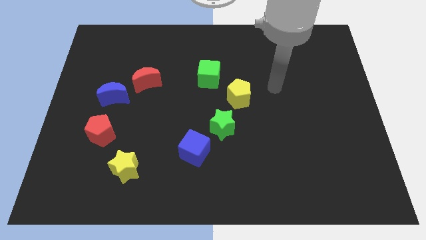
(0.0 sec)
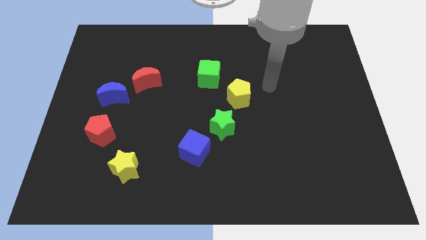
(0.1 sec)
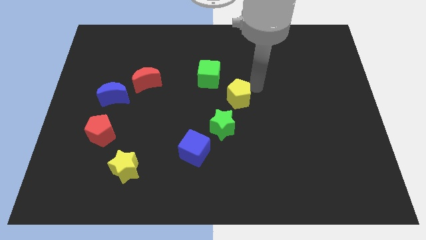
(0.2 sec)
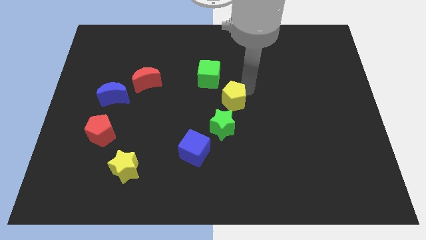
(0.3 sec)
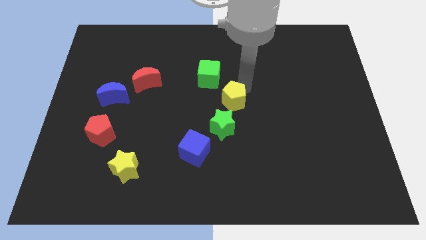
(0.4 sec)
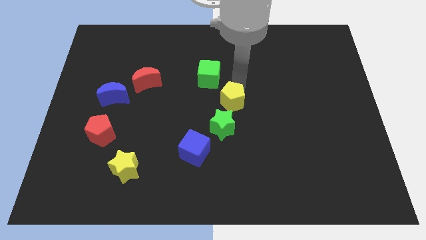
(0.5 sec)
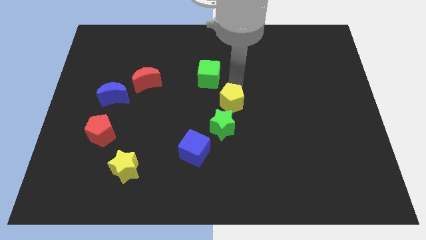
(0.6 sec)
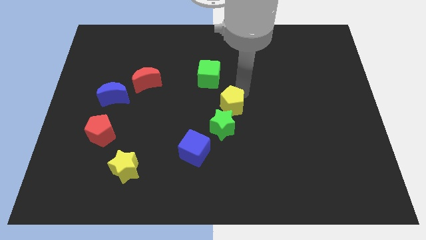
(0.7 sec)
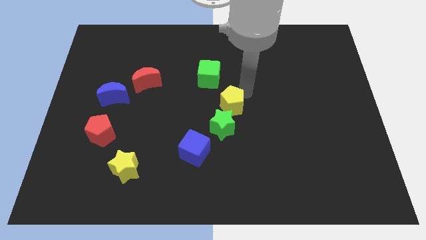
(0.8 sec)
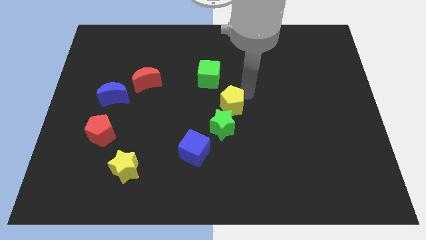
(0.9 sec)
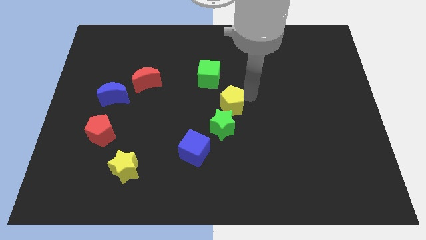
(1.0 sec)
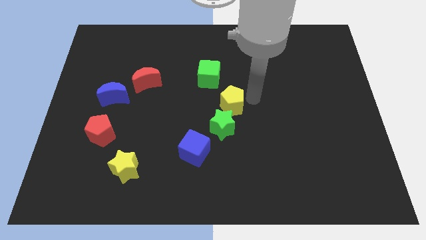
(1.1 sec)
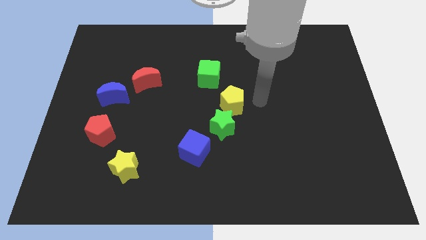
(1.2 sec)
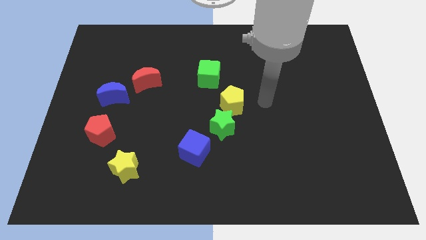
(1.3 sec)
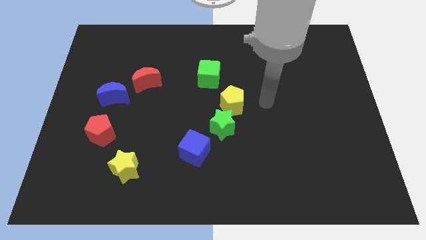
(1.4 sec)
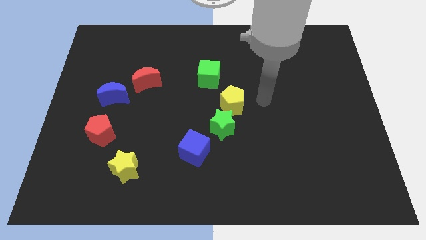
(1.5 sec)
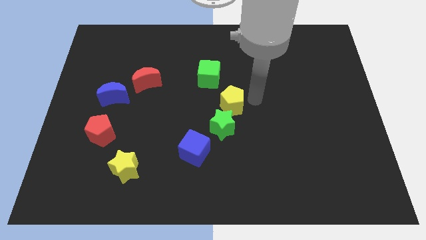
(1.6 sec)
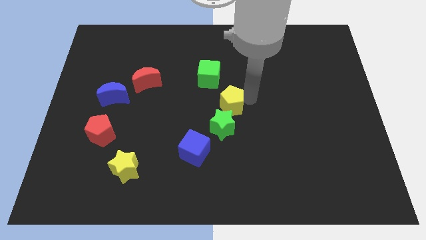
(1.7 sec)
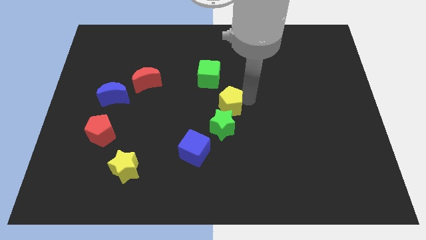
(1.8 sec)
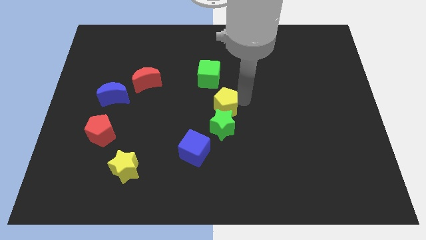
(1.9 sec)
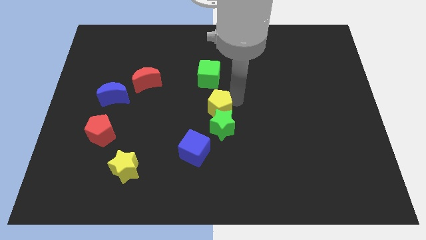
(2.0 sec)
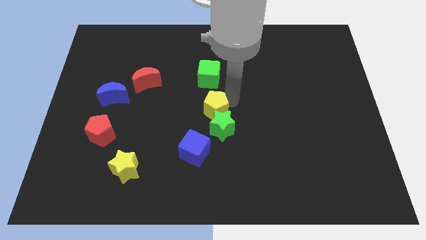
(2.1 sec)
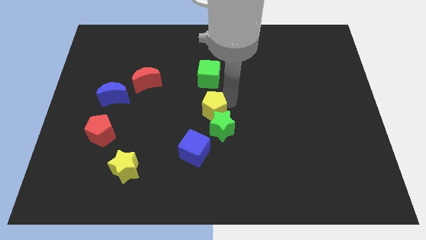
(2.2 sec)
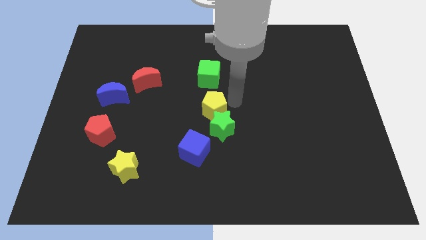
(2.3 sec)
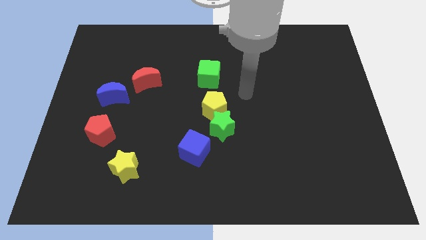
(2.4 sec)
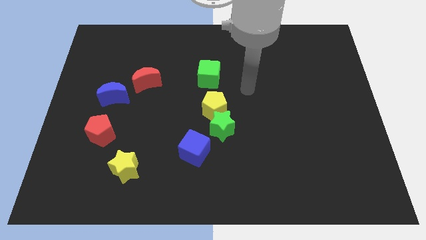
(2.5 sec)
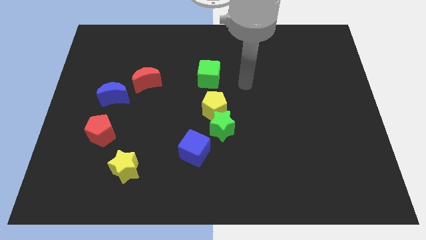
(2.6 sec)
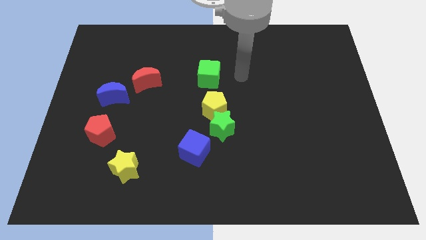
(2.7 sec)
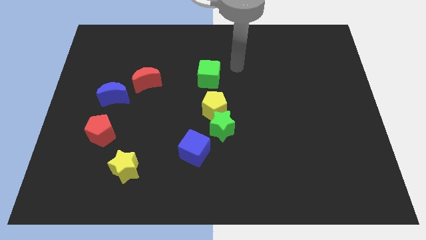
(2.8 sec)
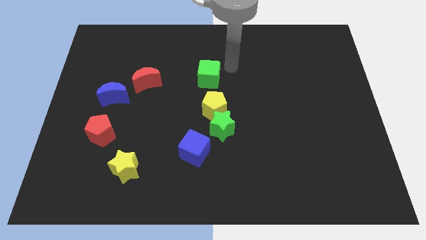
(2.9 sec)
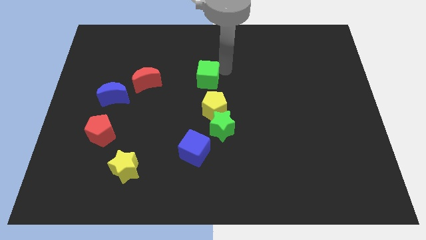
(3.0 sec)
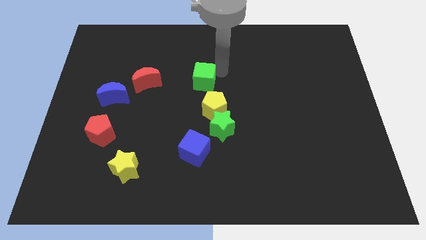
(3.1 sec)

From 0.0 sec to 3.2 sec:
slide the yellow pentagon and green cube close to each other

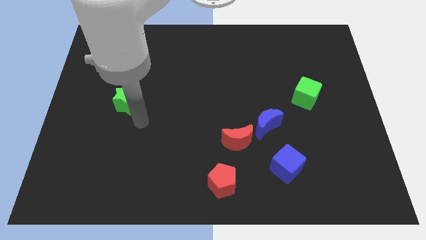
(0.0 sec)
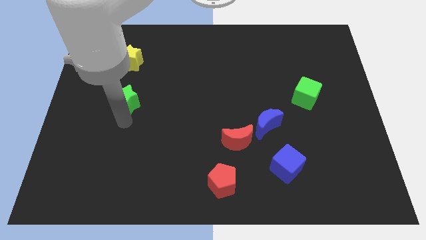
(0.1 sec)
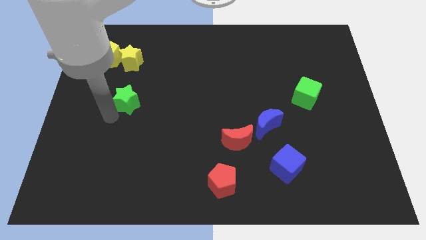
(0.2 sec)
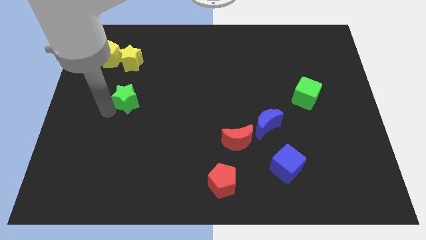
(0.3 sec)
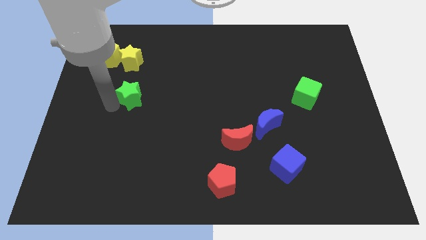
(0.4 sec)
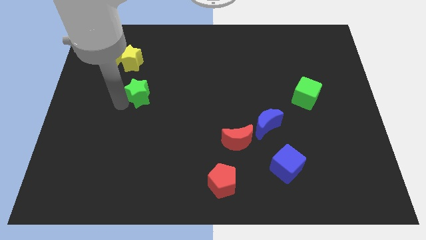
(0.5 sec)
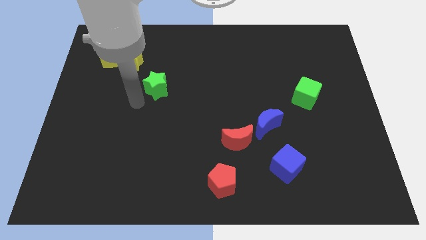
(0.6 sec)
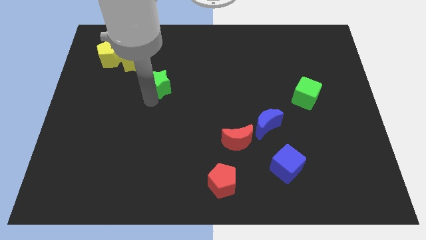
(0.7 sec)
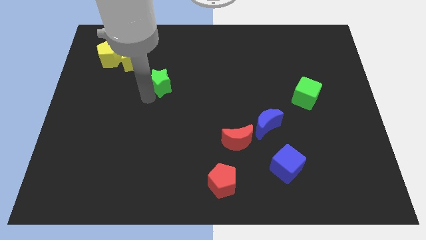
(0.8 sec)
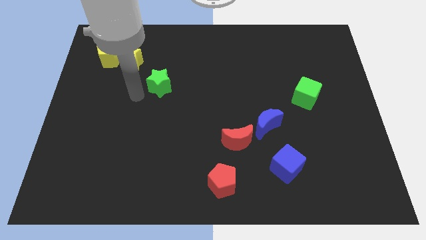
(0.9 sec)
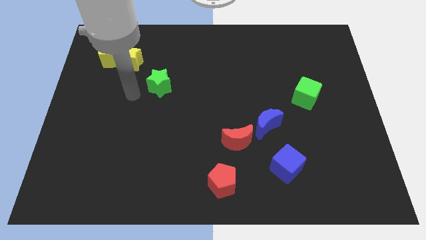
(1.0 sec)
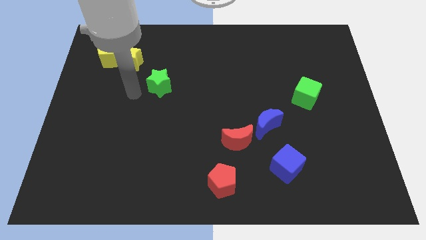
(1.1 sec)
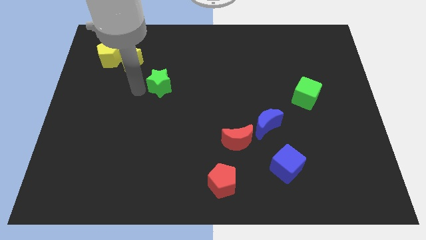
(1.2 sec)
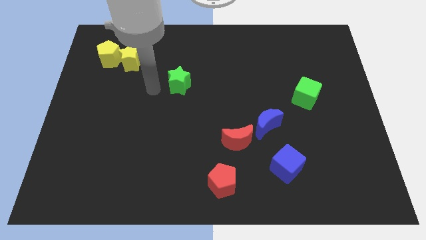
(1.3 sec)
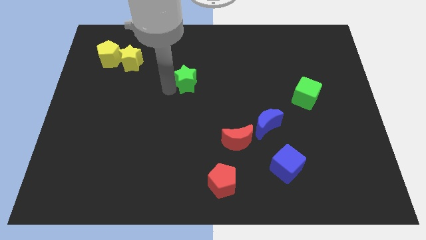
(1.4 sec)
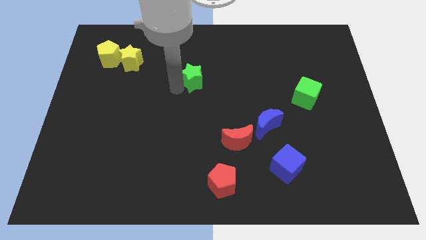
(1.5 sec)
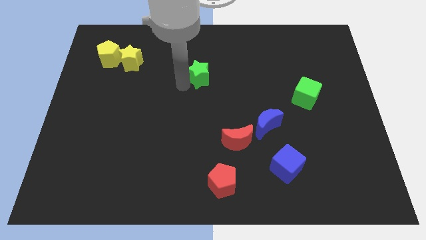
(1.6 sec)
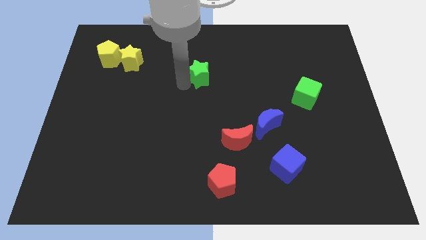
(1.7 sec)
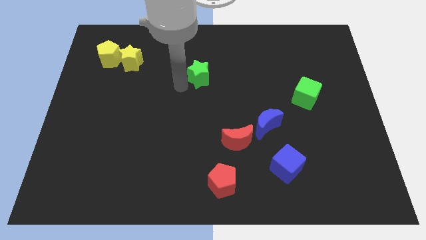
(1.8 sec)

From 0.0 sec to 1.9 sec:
move the green star towards the top center

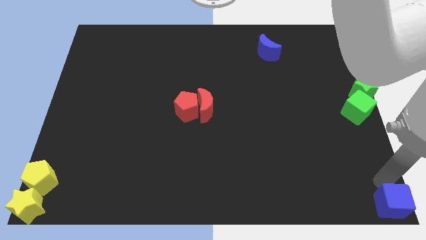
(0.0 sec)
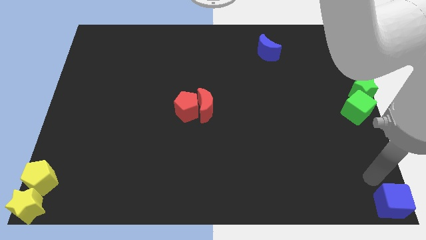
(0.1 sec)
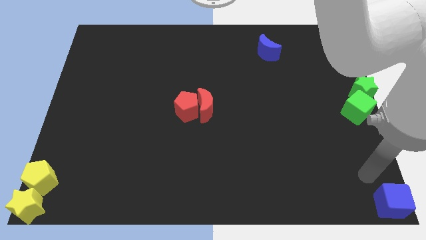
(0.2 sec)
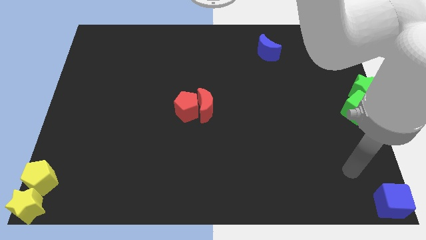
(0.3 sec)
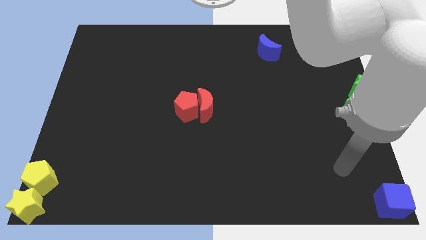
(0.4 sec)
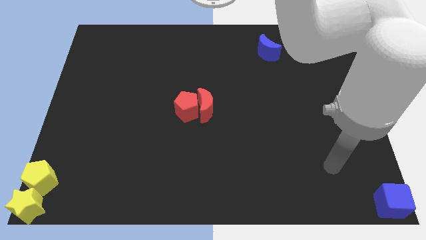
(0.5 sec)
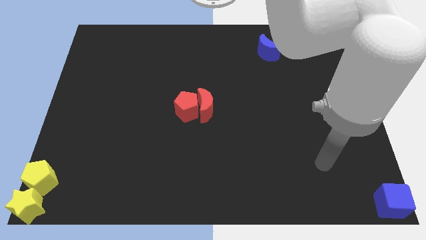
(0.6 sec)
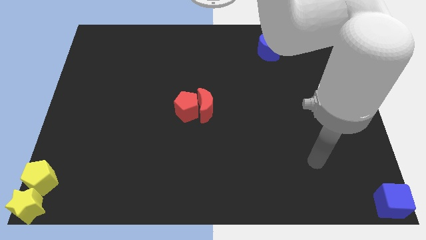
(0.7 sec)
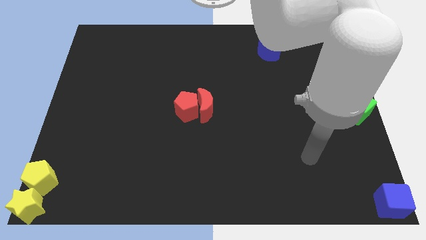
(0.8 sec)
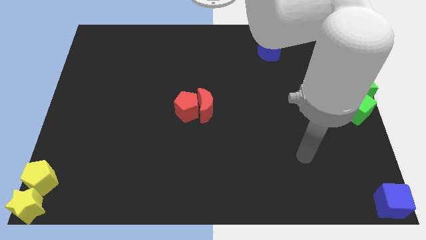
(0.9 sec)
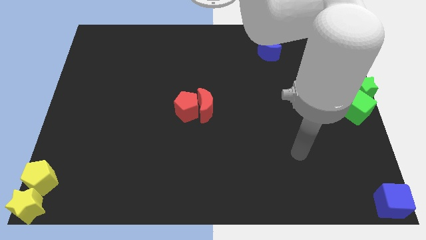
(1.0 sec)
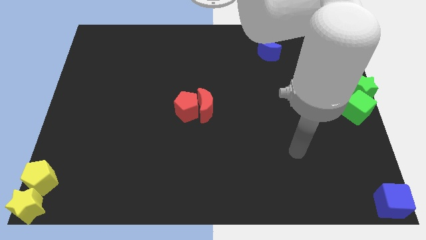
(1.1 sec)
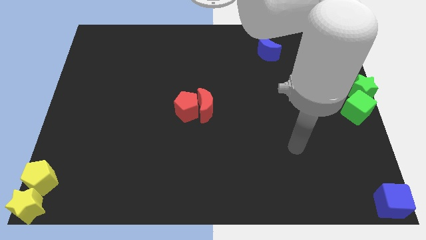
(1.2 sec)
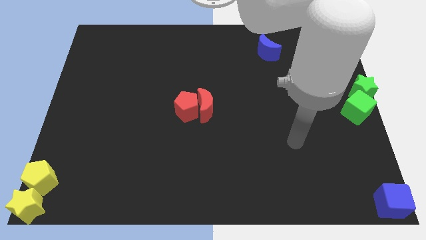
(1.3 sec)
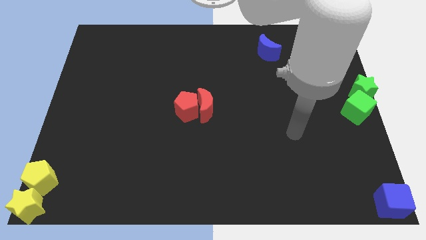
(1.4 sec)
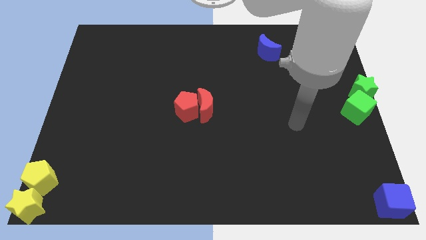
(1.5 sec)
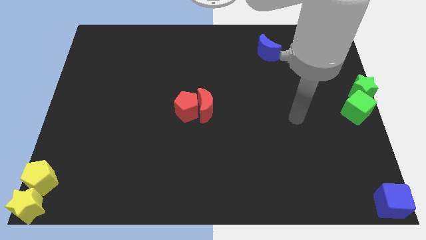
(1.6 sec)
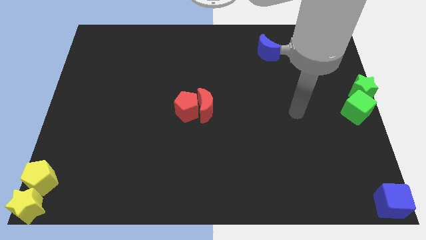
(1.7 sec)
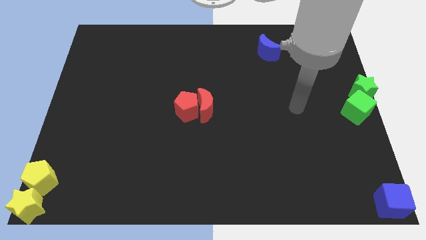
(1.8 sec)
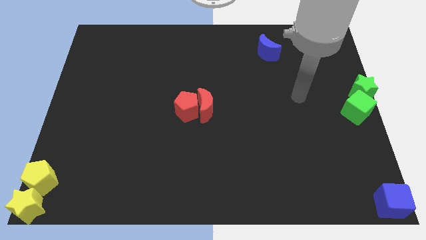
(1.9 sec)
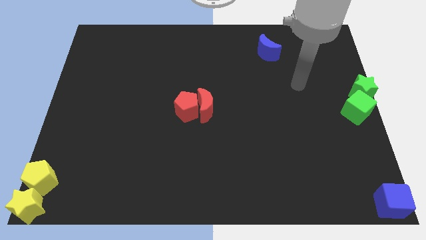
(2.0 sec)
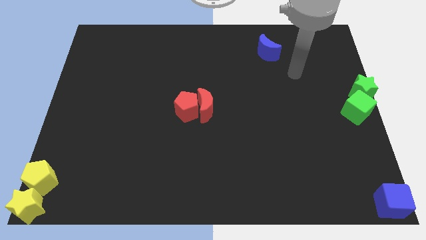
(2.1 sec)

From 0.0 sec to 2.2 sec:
move your arm away from the blue cube

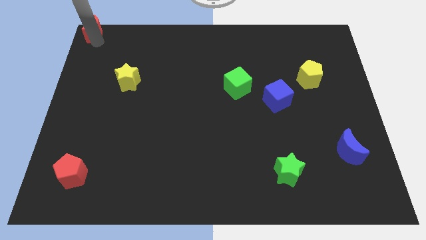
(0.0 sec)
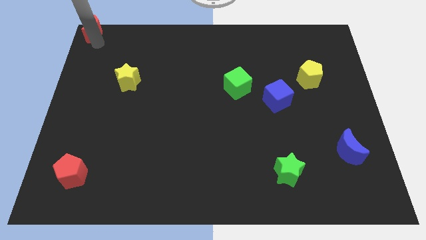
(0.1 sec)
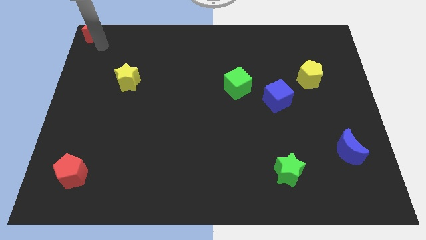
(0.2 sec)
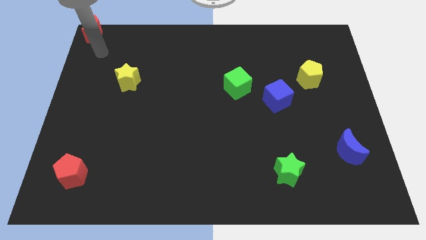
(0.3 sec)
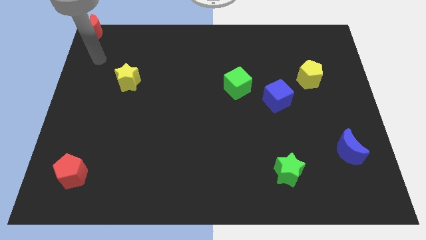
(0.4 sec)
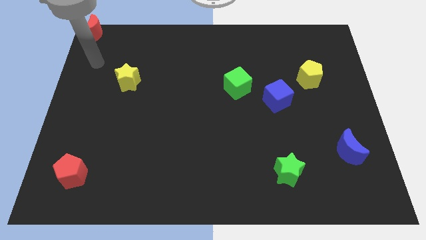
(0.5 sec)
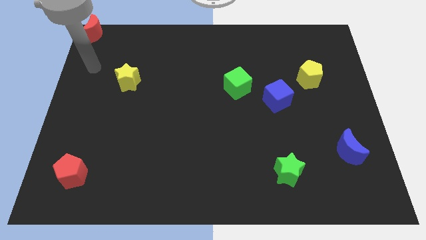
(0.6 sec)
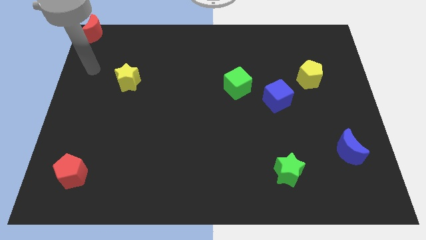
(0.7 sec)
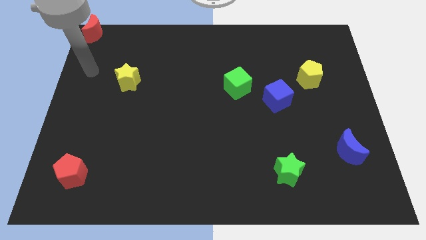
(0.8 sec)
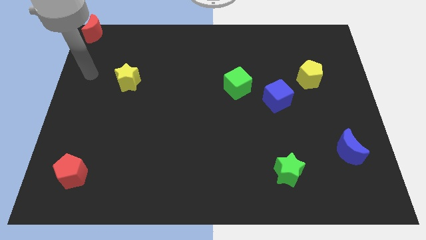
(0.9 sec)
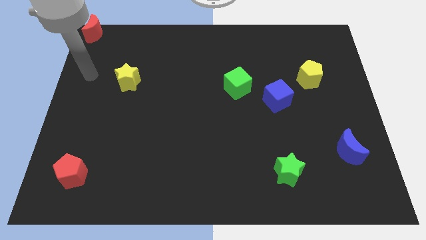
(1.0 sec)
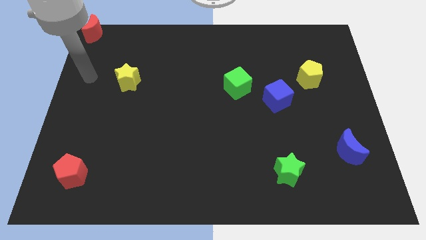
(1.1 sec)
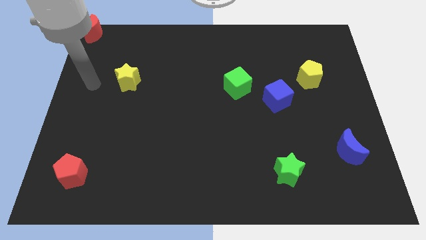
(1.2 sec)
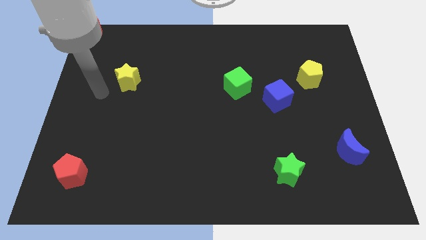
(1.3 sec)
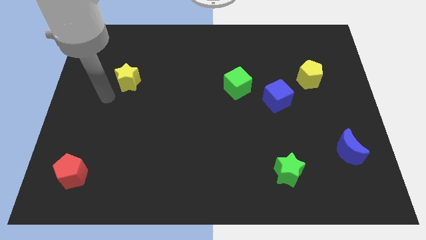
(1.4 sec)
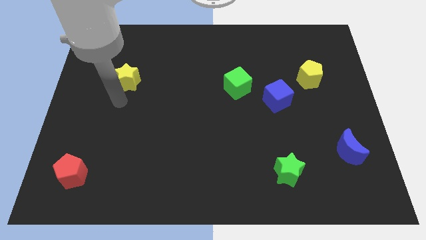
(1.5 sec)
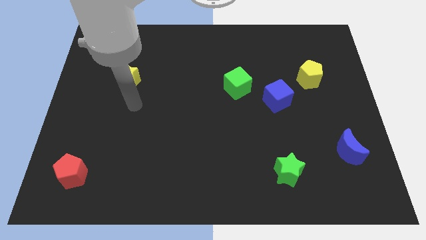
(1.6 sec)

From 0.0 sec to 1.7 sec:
place your arm at the bottom of the yellow star
